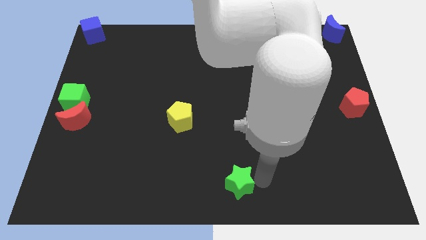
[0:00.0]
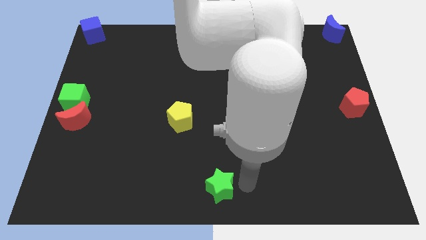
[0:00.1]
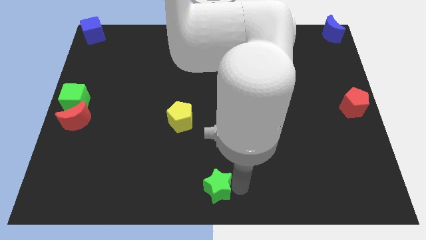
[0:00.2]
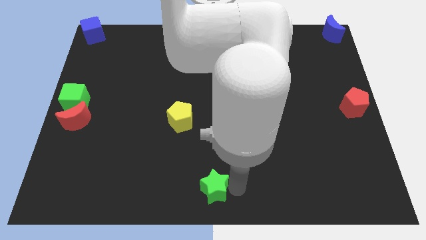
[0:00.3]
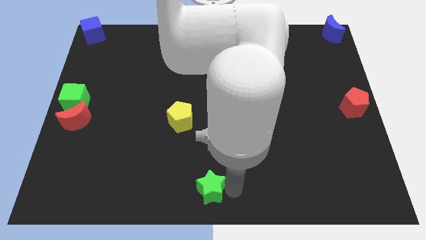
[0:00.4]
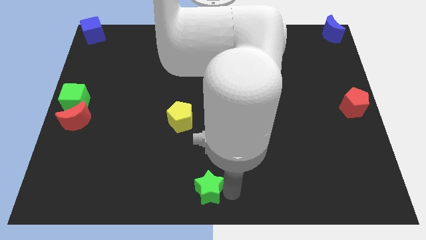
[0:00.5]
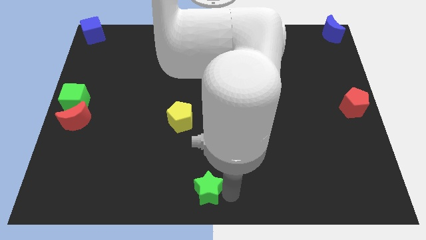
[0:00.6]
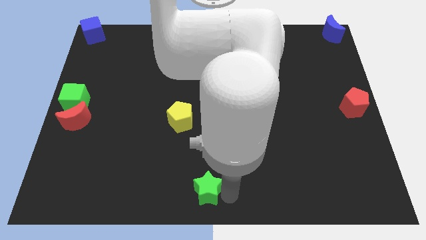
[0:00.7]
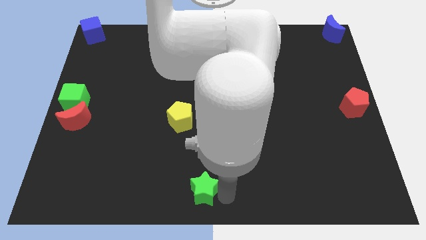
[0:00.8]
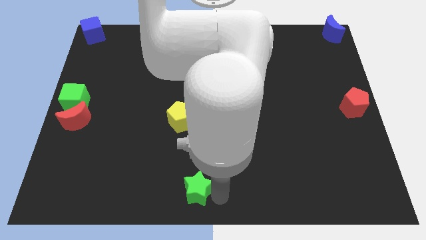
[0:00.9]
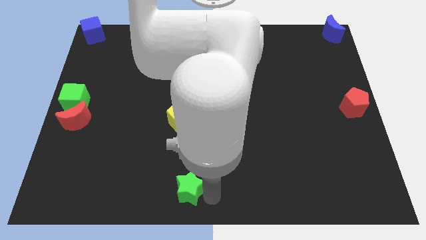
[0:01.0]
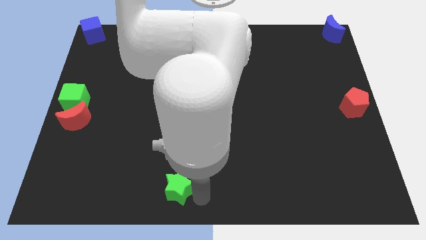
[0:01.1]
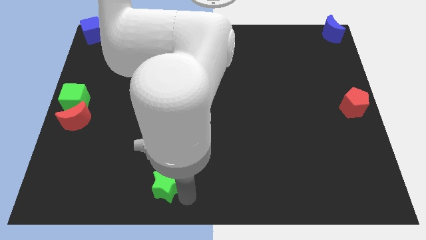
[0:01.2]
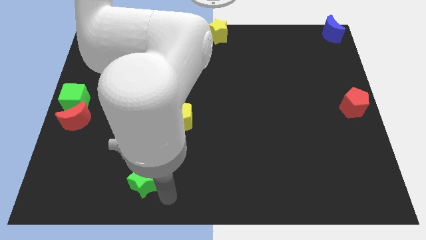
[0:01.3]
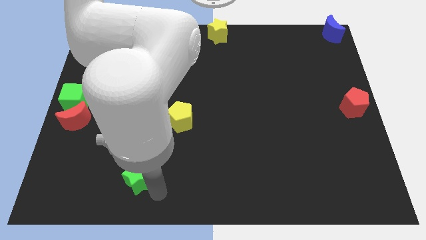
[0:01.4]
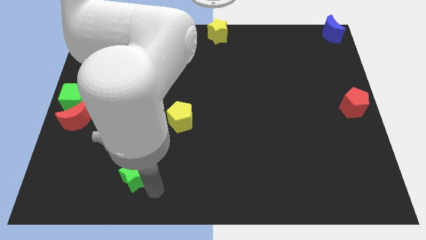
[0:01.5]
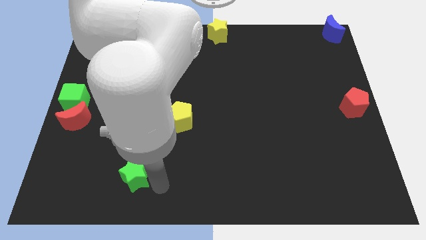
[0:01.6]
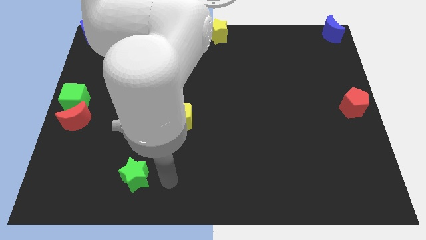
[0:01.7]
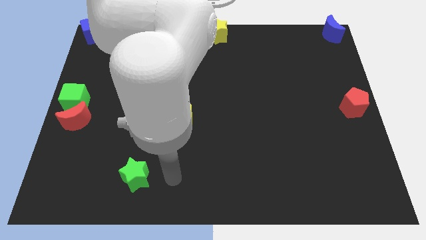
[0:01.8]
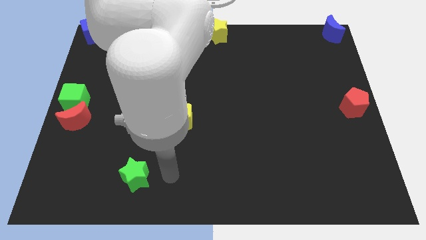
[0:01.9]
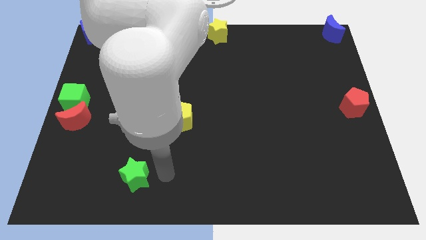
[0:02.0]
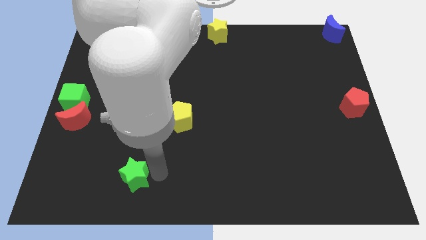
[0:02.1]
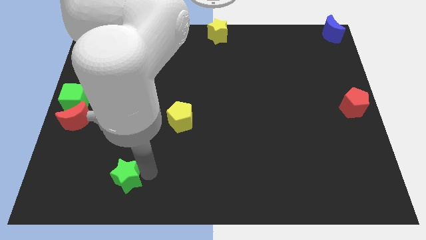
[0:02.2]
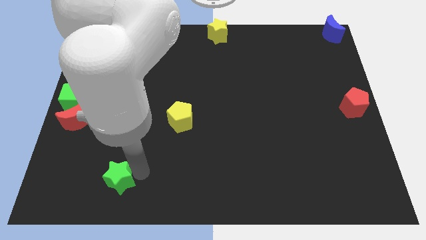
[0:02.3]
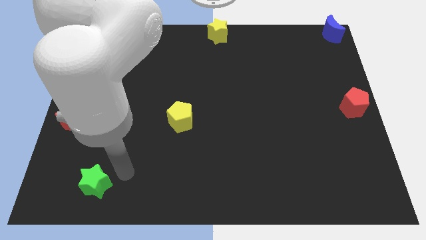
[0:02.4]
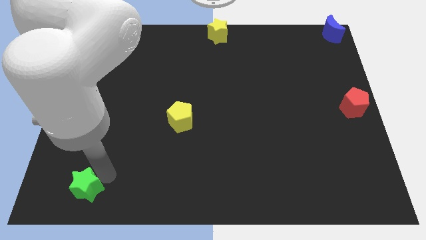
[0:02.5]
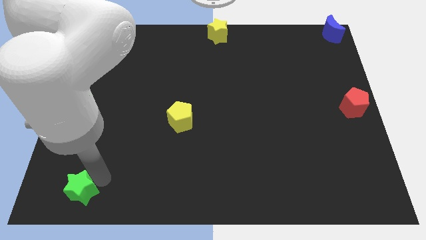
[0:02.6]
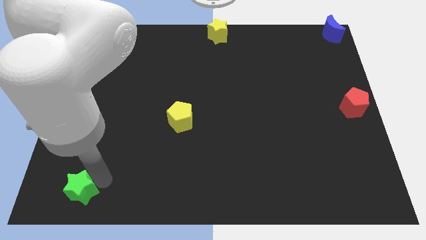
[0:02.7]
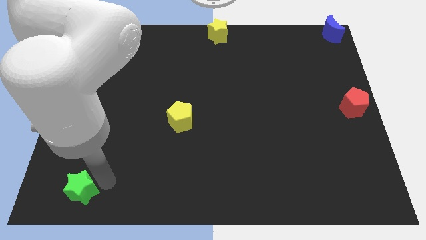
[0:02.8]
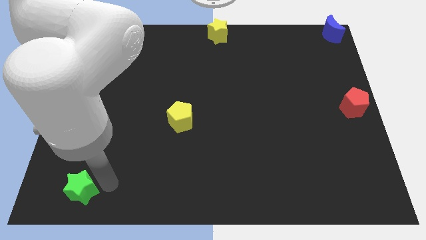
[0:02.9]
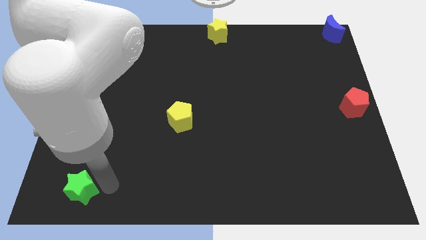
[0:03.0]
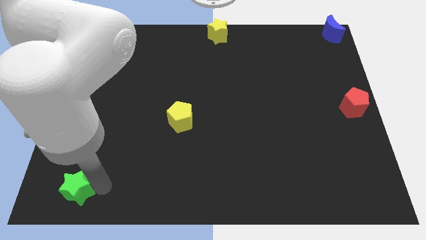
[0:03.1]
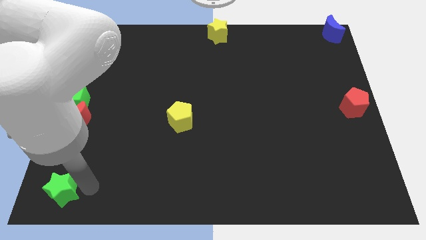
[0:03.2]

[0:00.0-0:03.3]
push the green star towards the bottom left of the board

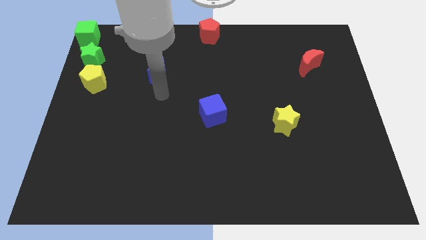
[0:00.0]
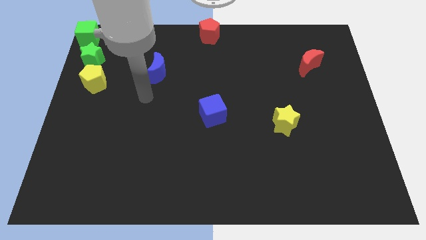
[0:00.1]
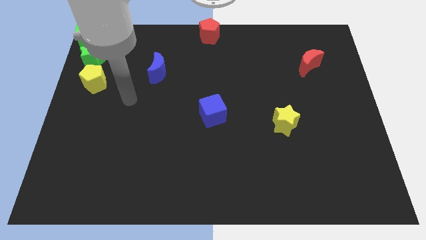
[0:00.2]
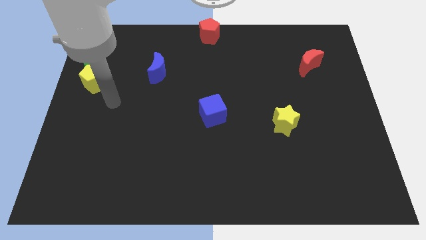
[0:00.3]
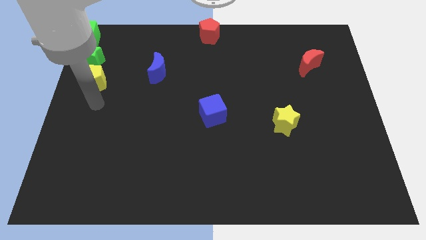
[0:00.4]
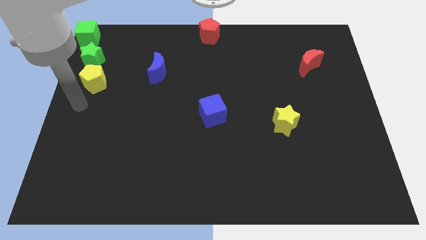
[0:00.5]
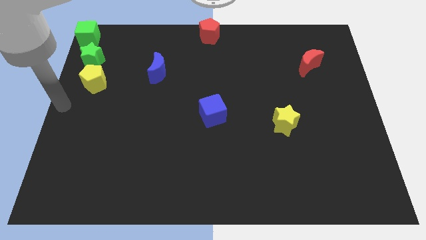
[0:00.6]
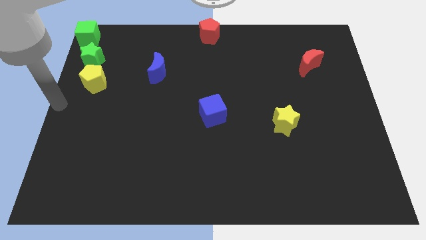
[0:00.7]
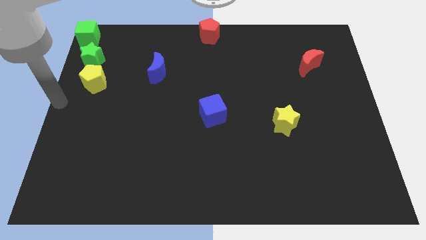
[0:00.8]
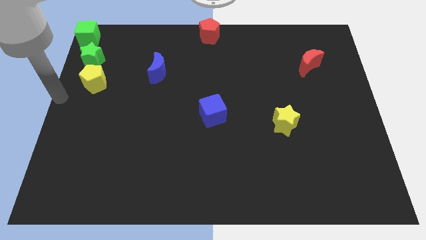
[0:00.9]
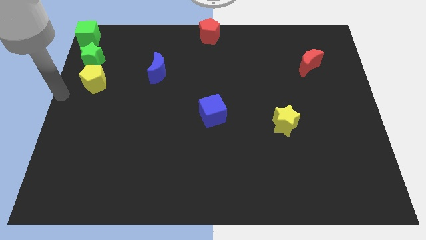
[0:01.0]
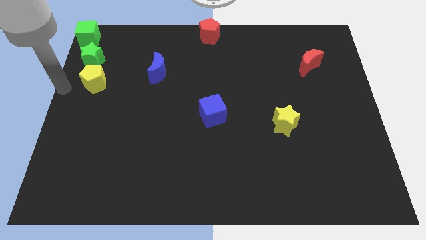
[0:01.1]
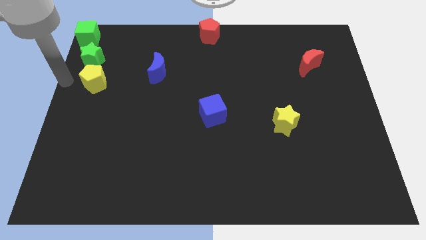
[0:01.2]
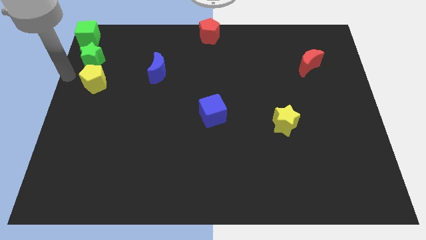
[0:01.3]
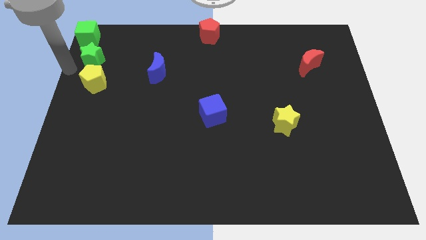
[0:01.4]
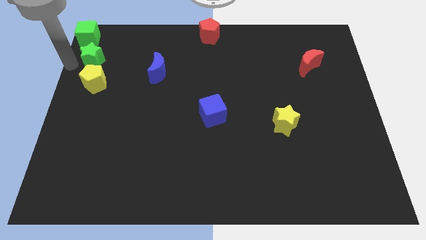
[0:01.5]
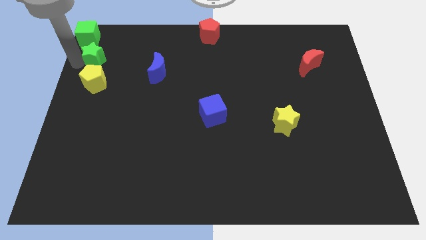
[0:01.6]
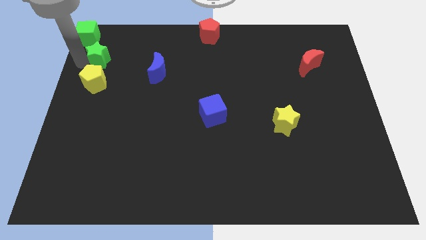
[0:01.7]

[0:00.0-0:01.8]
tap the left side of the green star

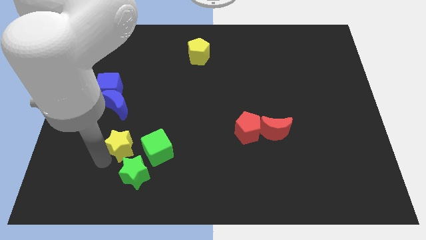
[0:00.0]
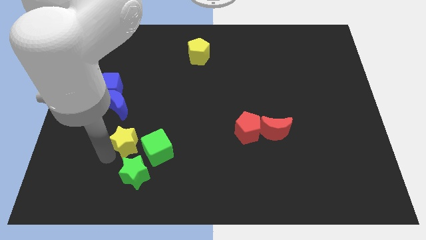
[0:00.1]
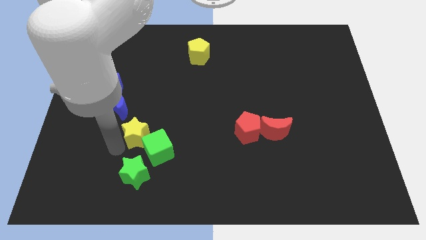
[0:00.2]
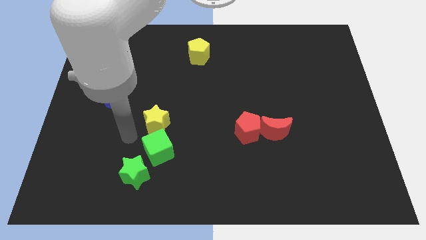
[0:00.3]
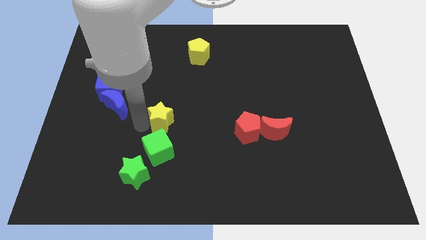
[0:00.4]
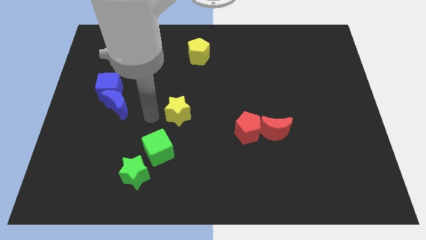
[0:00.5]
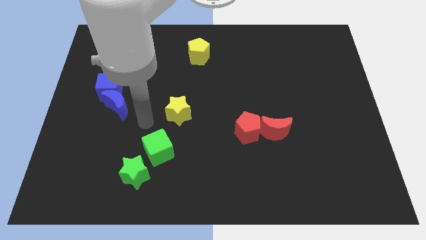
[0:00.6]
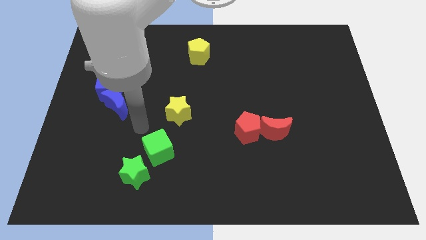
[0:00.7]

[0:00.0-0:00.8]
move the yellow star to the top right of the green cube

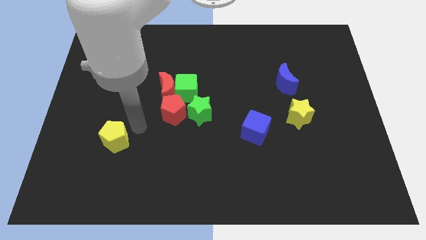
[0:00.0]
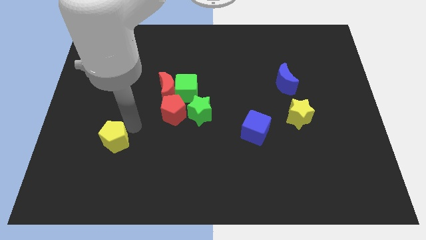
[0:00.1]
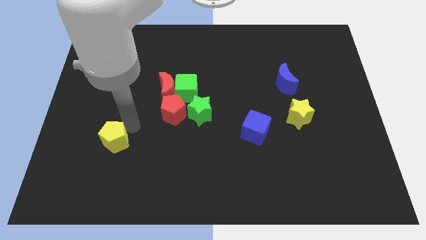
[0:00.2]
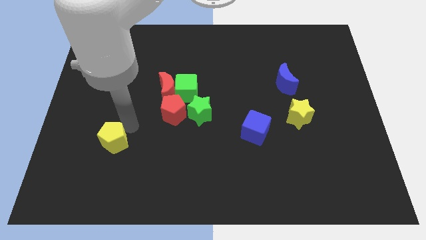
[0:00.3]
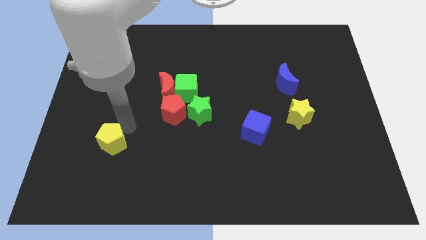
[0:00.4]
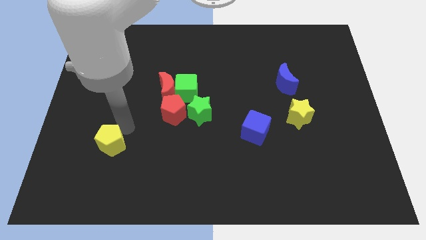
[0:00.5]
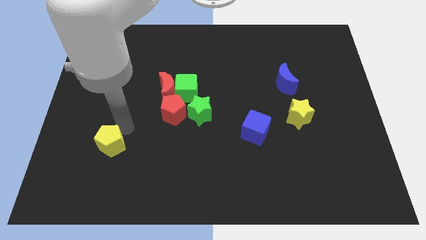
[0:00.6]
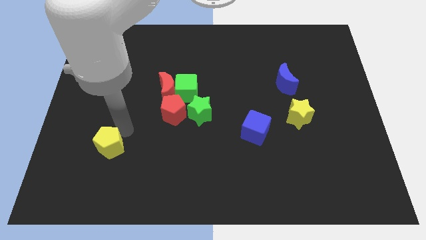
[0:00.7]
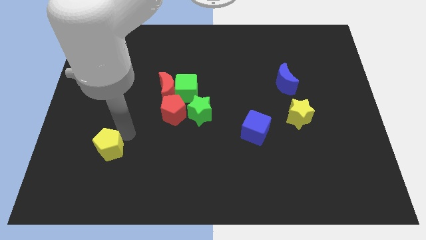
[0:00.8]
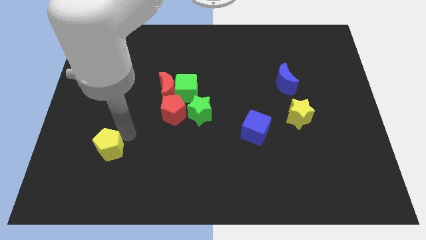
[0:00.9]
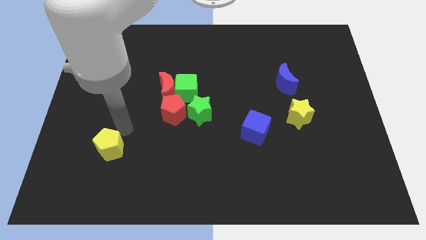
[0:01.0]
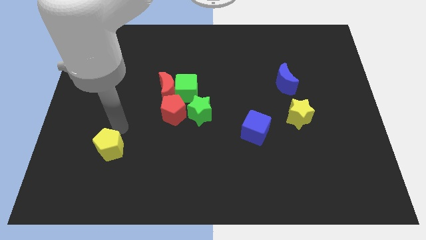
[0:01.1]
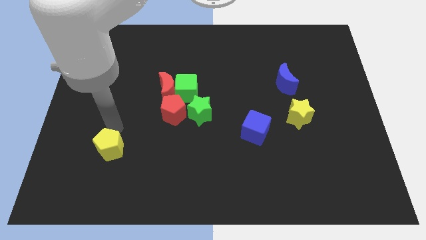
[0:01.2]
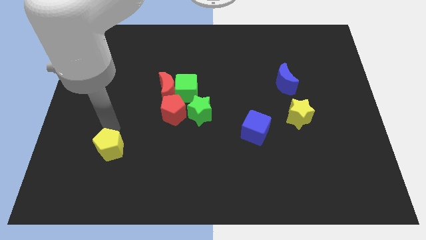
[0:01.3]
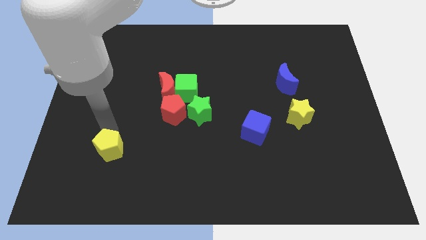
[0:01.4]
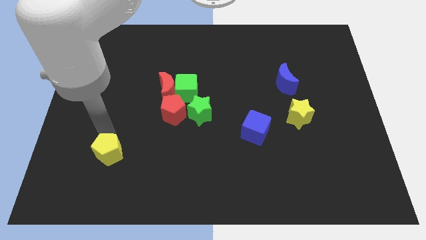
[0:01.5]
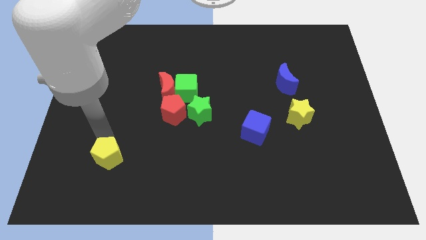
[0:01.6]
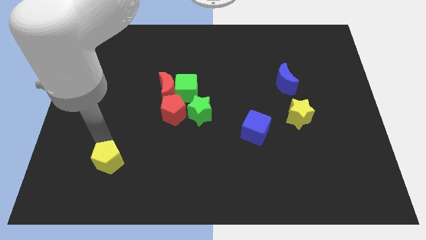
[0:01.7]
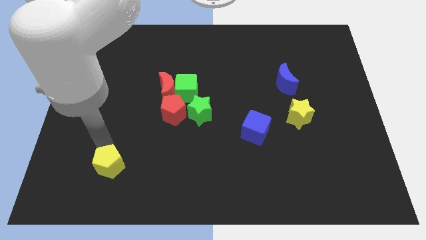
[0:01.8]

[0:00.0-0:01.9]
push the yellow pentagon towards the bottom side of the board

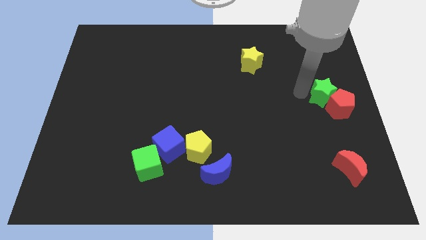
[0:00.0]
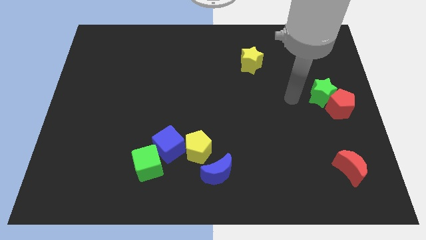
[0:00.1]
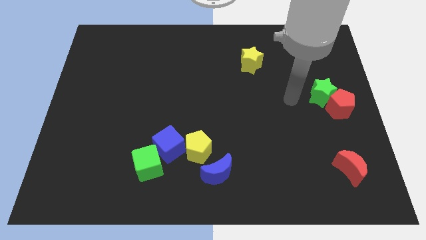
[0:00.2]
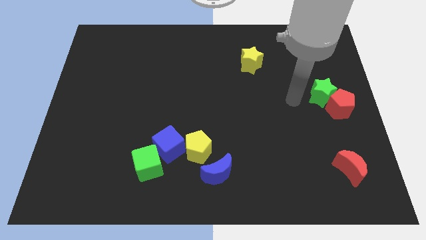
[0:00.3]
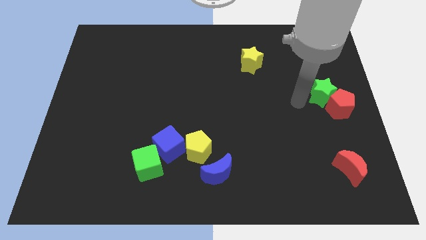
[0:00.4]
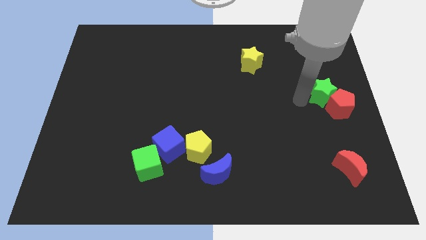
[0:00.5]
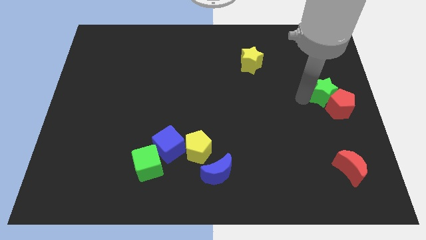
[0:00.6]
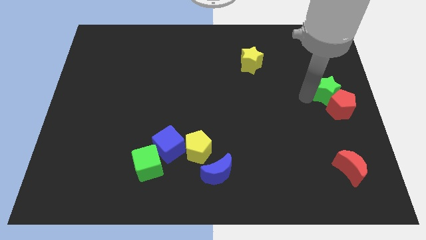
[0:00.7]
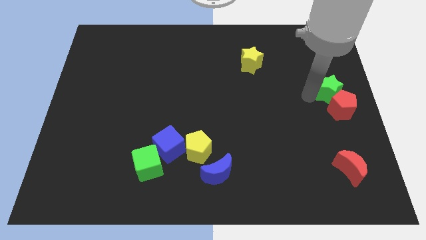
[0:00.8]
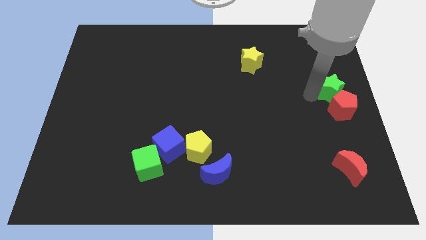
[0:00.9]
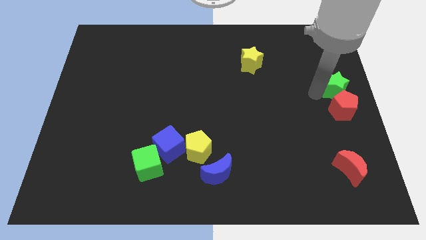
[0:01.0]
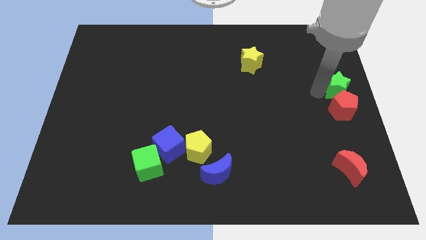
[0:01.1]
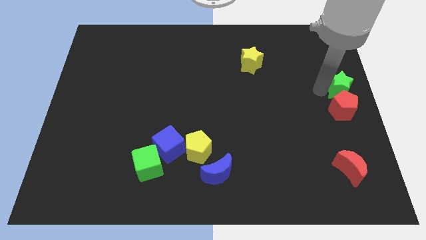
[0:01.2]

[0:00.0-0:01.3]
move green star above red pentagon
